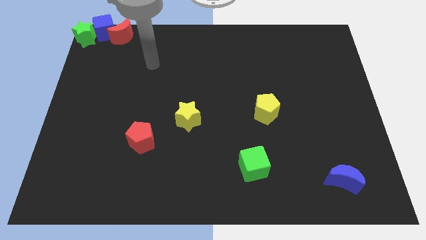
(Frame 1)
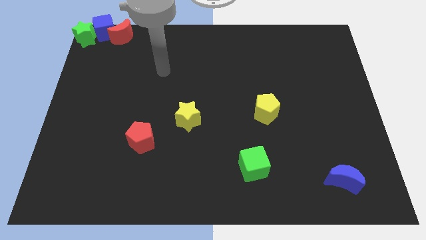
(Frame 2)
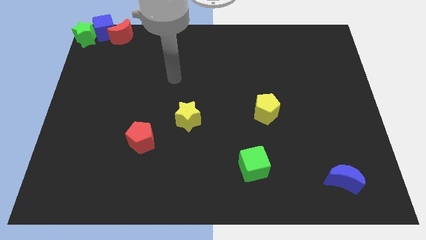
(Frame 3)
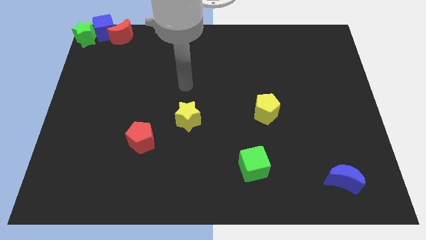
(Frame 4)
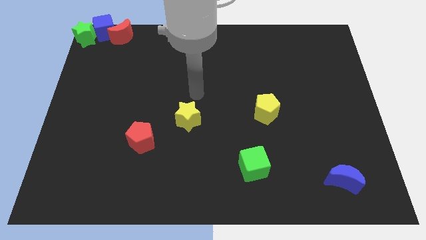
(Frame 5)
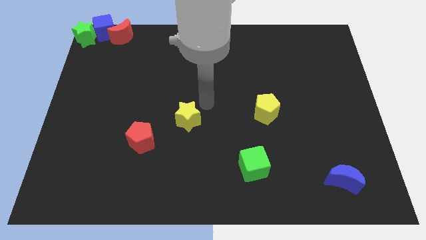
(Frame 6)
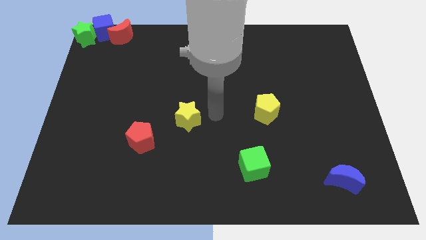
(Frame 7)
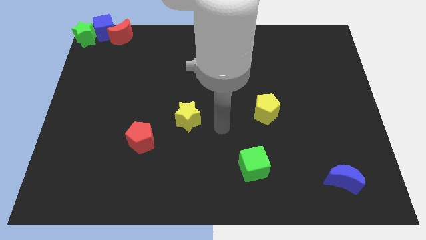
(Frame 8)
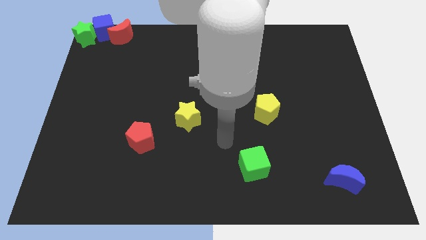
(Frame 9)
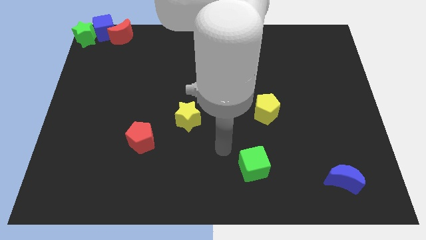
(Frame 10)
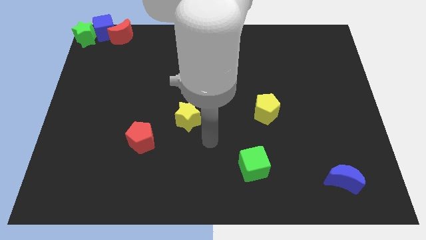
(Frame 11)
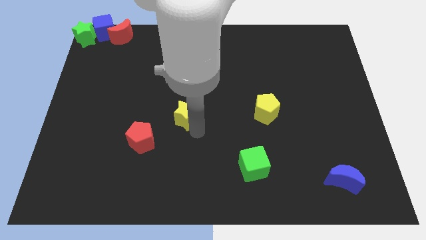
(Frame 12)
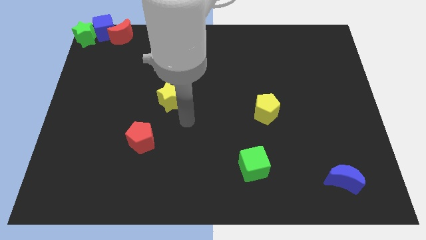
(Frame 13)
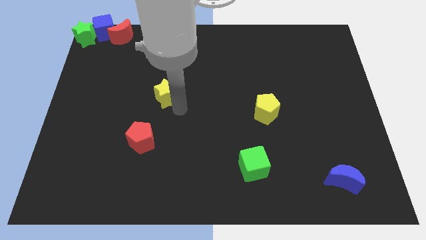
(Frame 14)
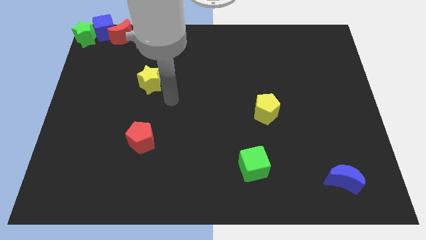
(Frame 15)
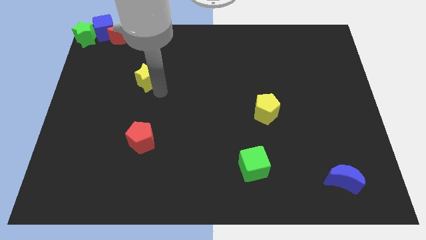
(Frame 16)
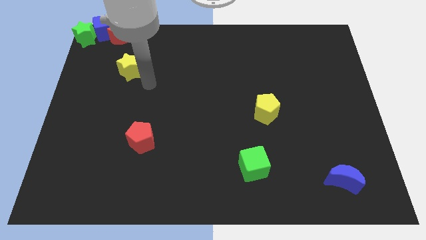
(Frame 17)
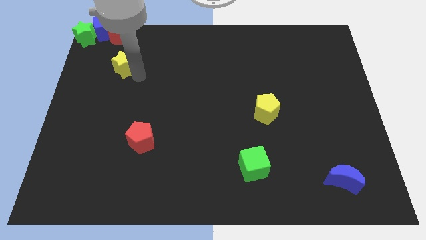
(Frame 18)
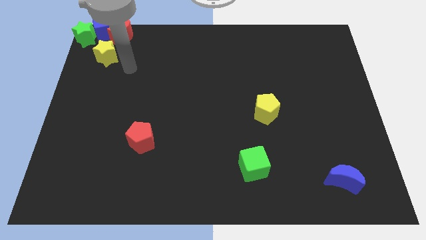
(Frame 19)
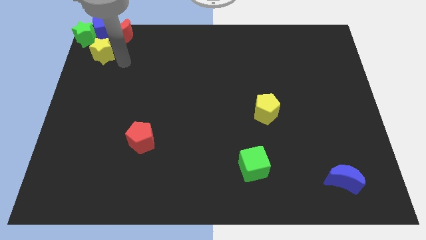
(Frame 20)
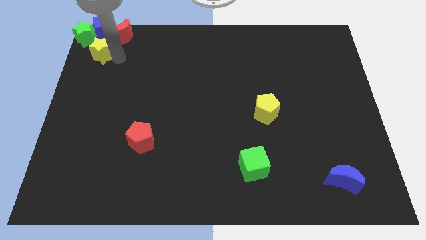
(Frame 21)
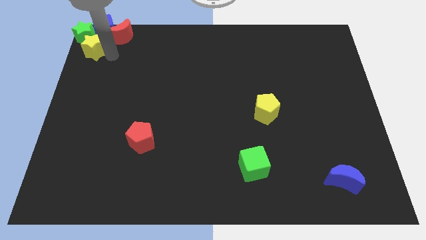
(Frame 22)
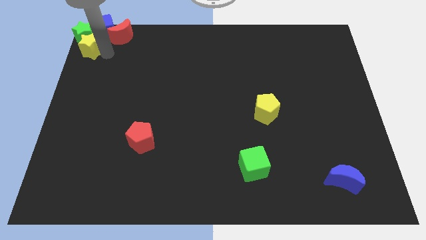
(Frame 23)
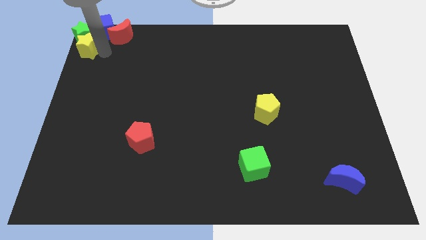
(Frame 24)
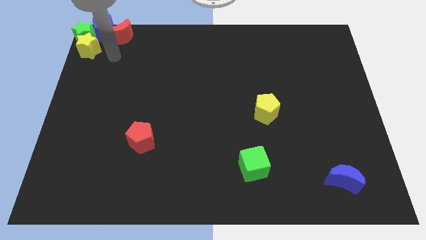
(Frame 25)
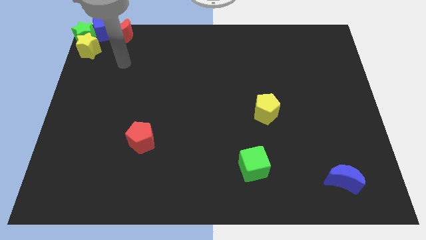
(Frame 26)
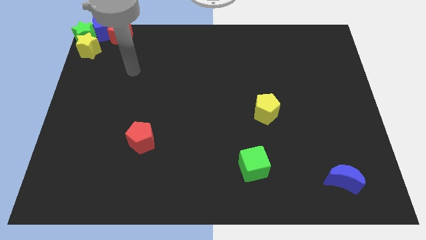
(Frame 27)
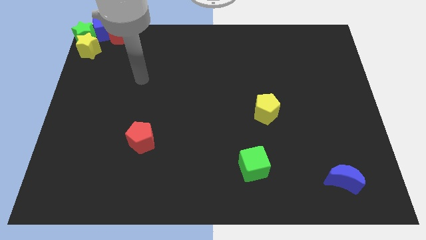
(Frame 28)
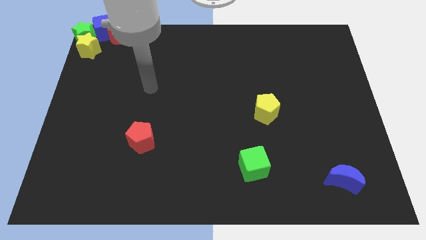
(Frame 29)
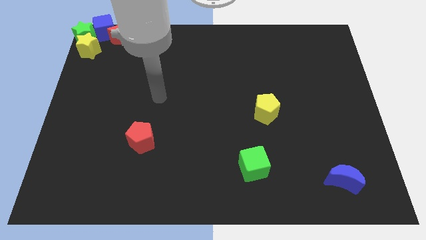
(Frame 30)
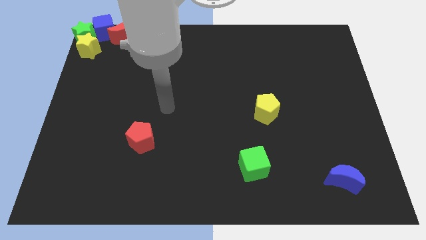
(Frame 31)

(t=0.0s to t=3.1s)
push the yellow star to the bottom of the green star

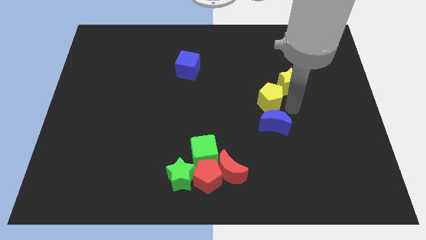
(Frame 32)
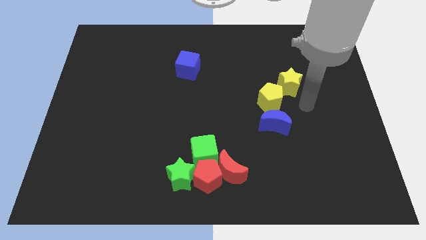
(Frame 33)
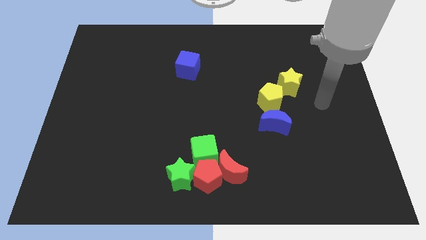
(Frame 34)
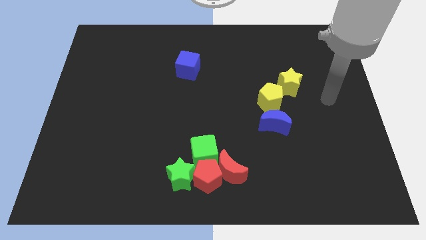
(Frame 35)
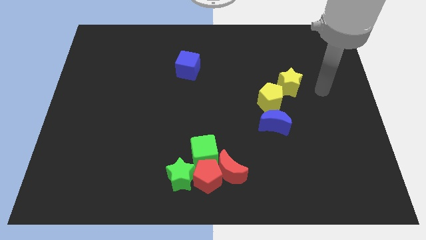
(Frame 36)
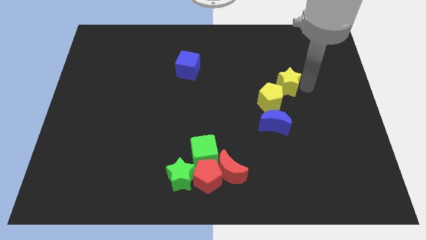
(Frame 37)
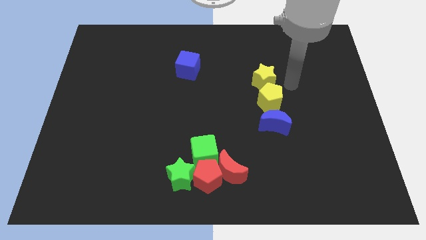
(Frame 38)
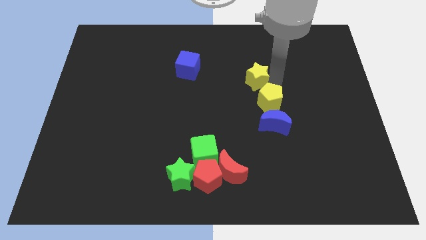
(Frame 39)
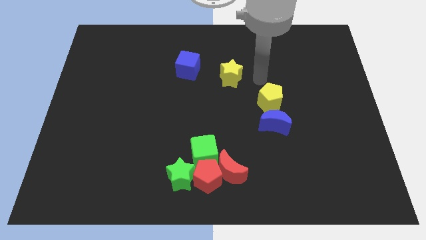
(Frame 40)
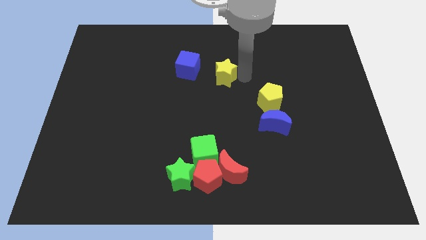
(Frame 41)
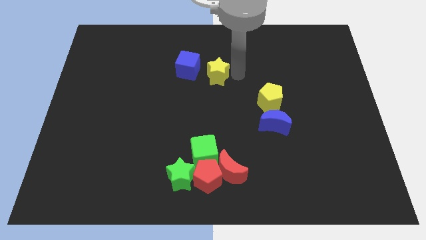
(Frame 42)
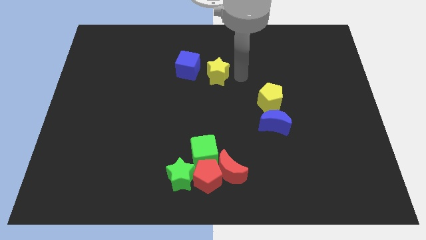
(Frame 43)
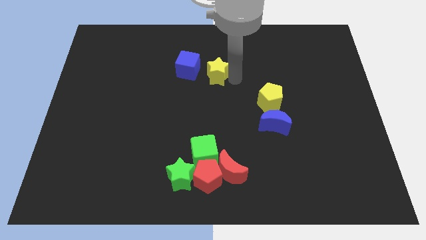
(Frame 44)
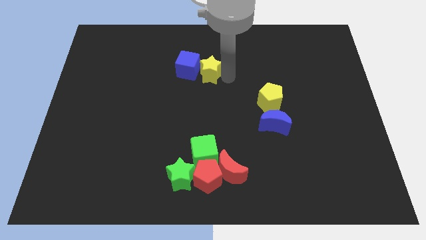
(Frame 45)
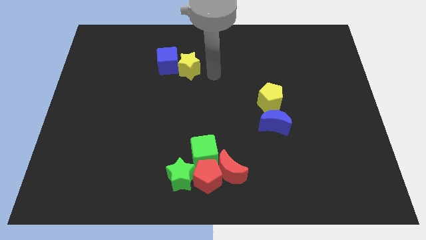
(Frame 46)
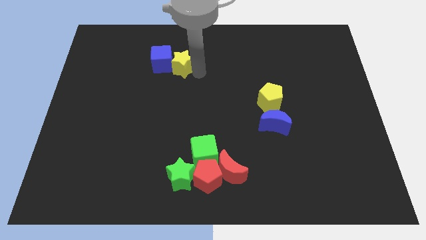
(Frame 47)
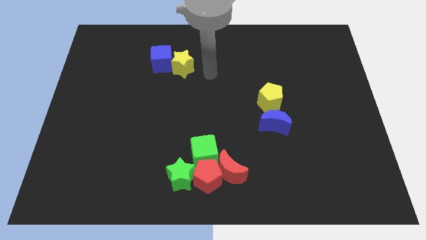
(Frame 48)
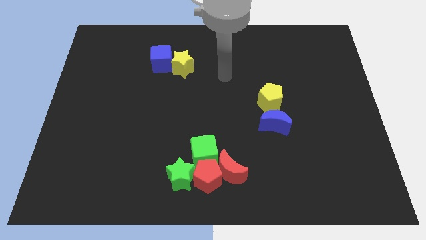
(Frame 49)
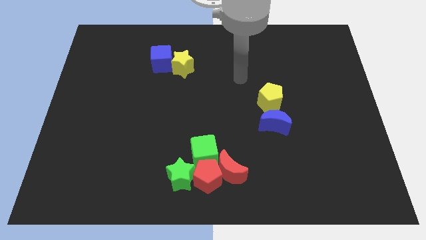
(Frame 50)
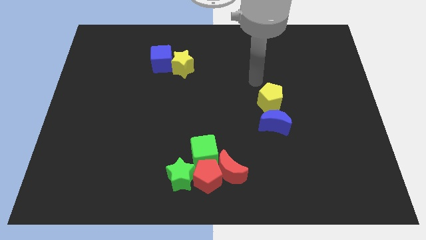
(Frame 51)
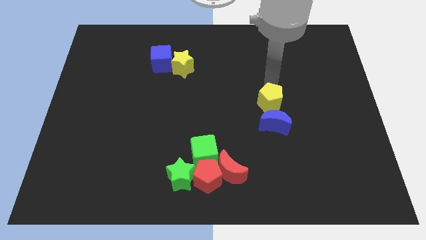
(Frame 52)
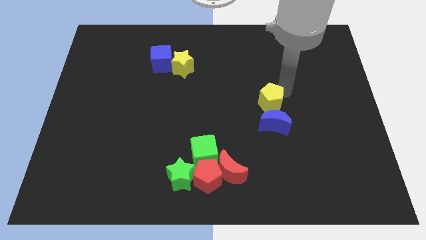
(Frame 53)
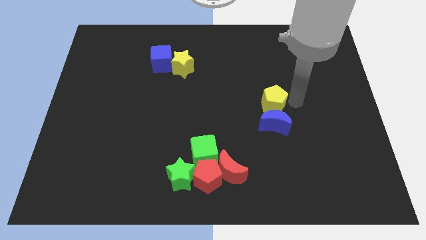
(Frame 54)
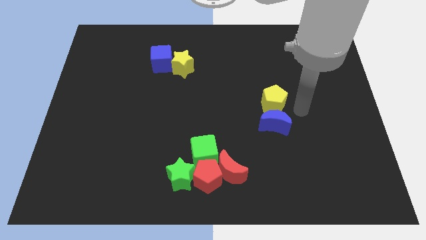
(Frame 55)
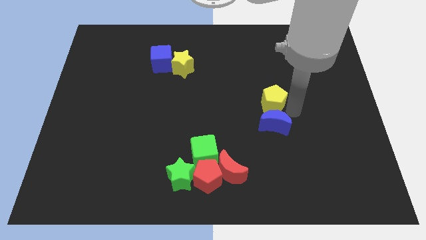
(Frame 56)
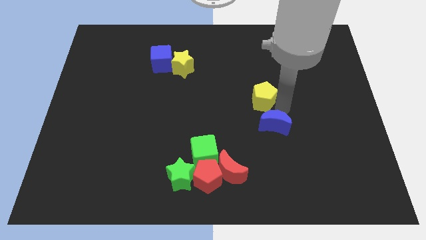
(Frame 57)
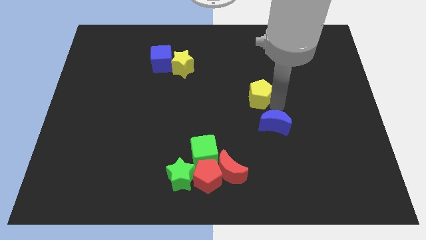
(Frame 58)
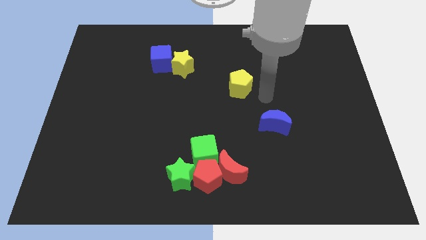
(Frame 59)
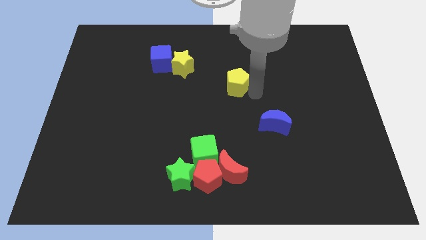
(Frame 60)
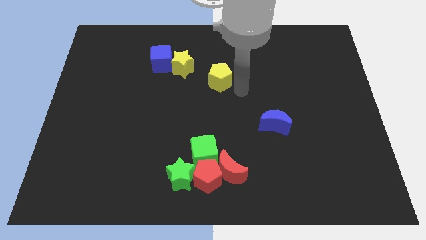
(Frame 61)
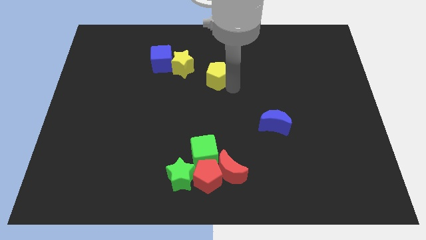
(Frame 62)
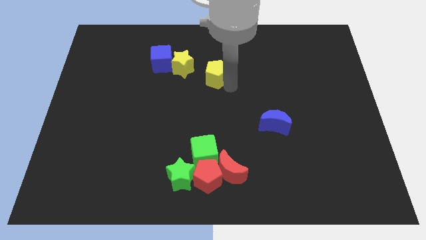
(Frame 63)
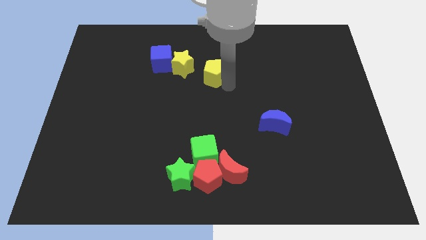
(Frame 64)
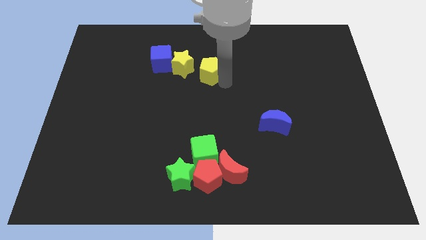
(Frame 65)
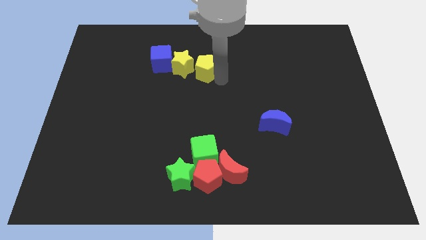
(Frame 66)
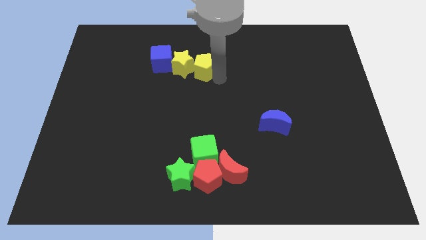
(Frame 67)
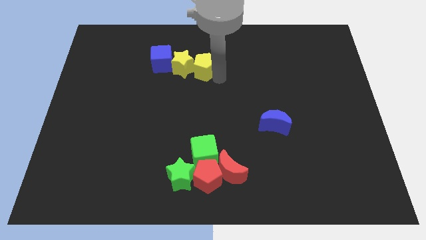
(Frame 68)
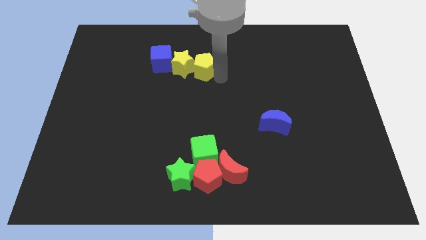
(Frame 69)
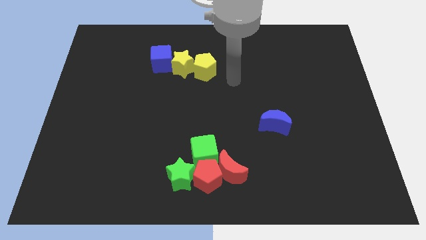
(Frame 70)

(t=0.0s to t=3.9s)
slide the yellow star and yellow pentagon to the bottom right side of the blue cube

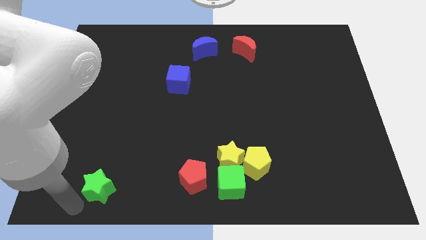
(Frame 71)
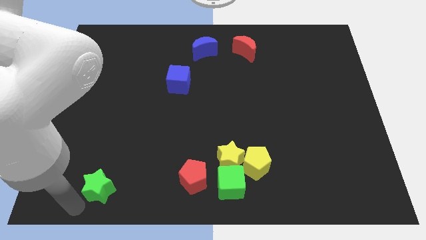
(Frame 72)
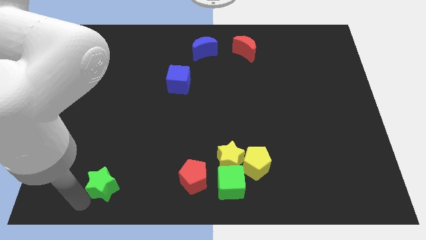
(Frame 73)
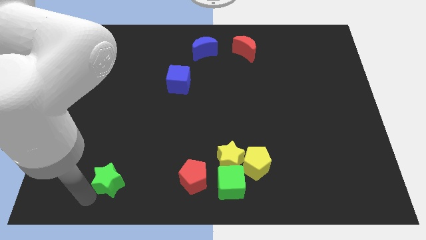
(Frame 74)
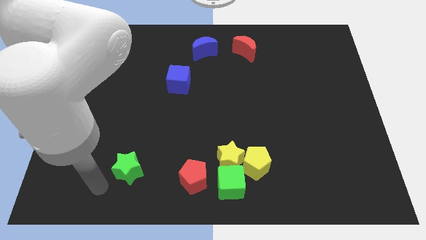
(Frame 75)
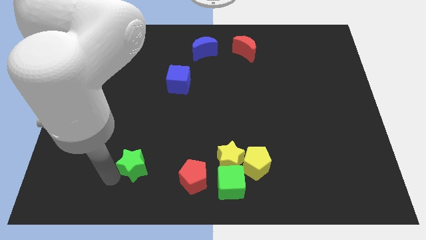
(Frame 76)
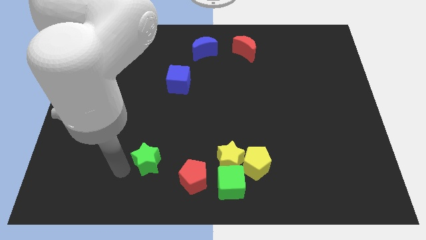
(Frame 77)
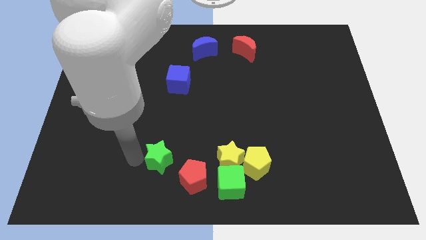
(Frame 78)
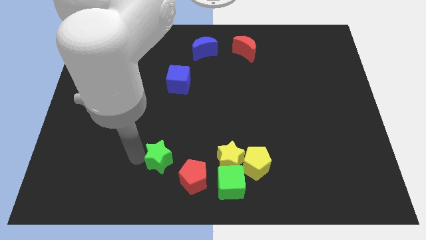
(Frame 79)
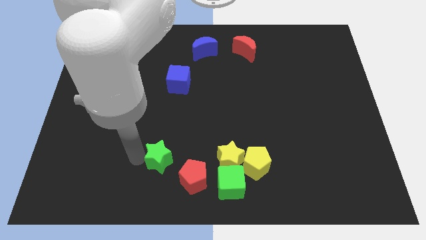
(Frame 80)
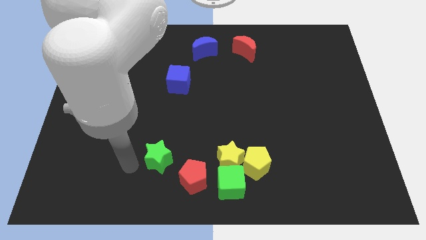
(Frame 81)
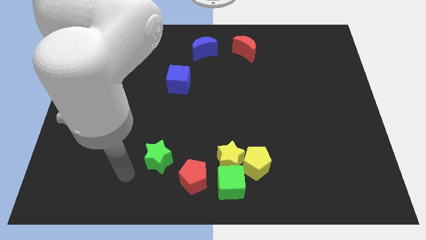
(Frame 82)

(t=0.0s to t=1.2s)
place the green star at the top left side of red pentagon

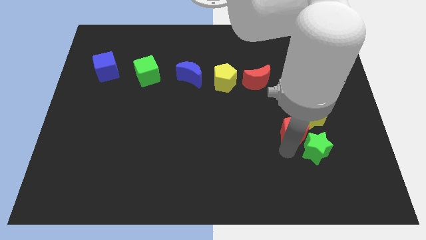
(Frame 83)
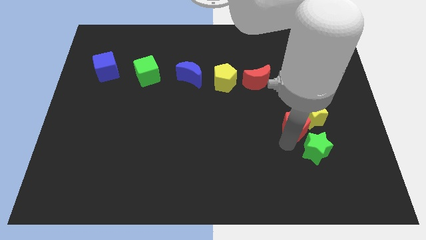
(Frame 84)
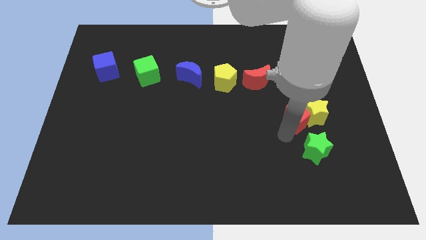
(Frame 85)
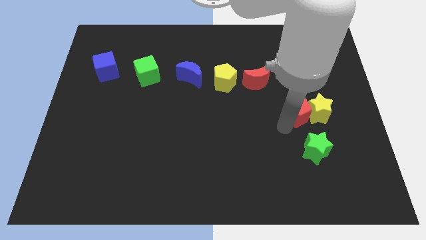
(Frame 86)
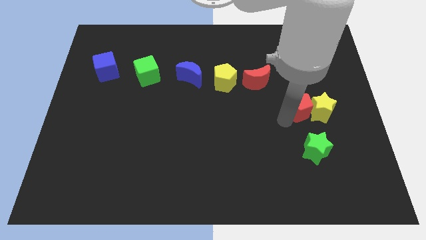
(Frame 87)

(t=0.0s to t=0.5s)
place red crescent beside yellow star

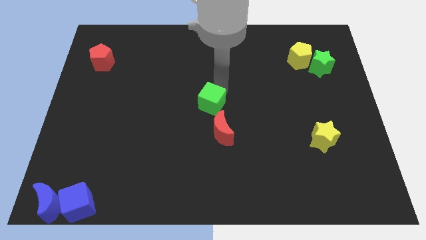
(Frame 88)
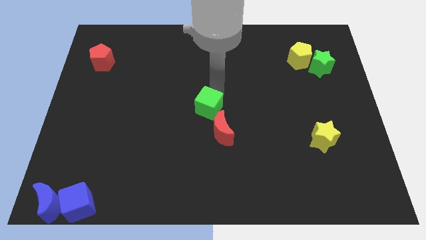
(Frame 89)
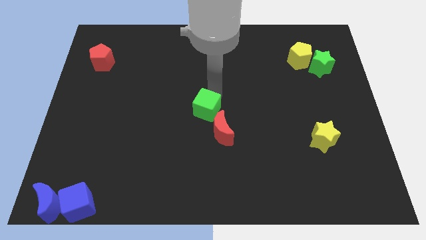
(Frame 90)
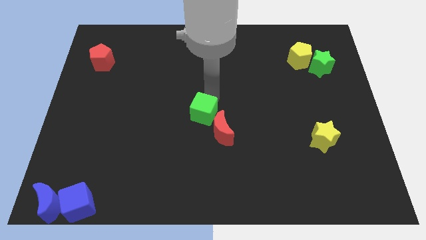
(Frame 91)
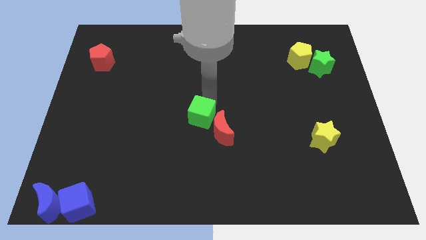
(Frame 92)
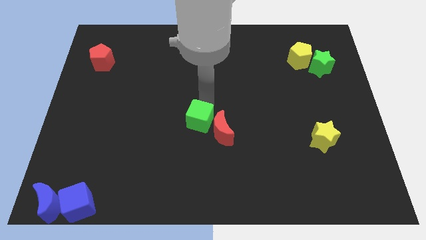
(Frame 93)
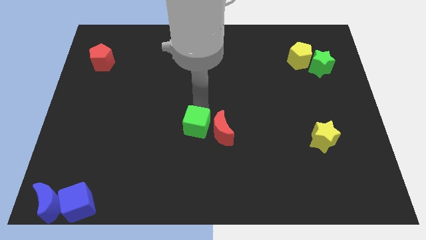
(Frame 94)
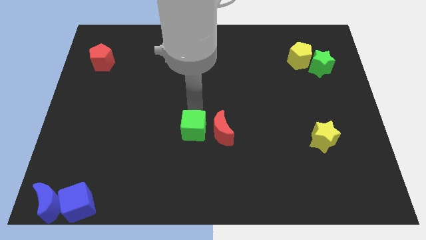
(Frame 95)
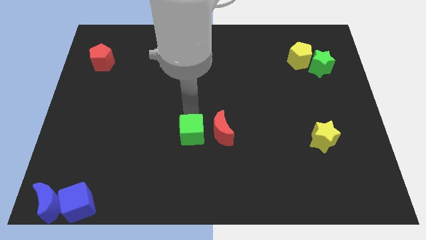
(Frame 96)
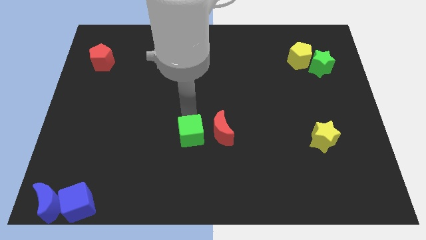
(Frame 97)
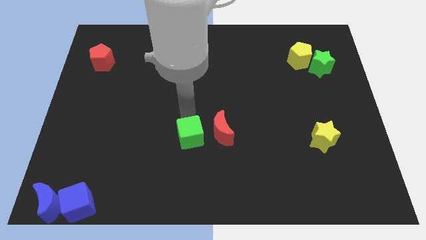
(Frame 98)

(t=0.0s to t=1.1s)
move green cube to the left of red moon
